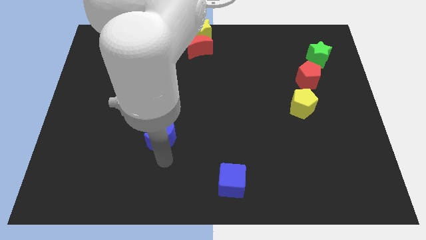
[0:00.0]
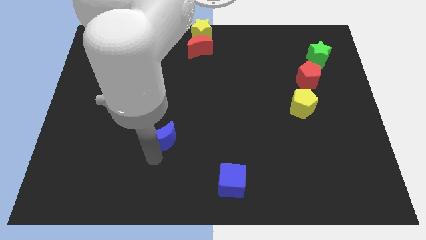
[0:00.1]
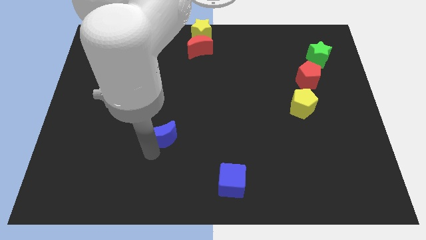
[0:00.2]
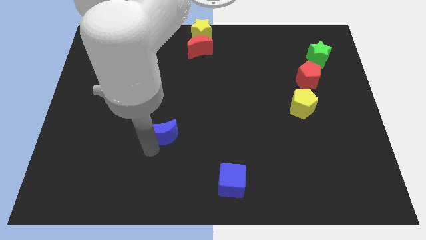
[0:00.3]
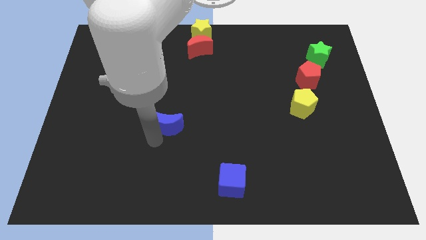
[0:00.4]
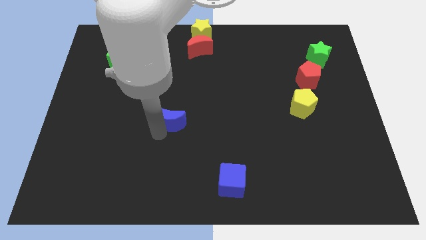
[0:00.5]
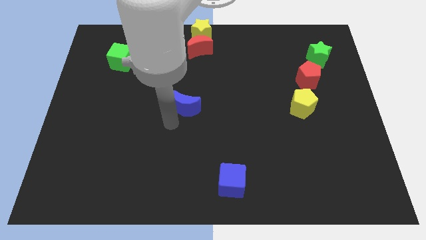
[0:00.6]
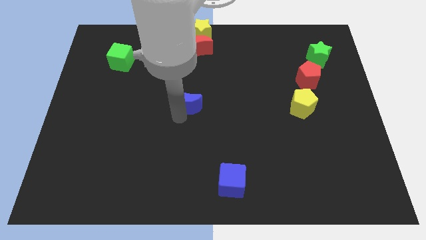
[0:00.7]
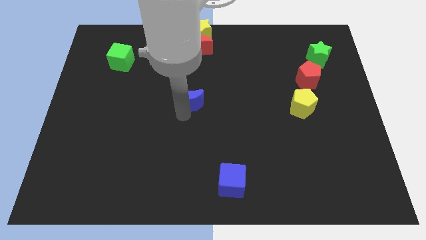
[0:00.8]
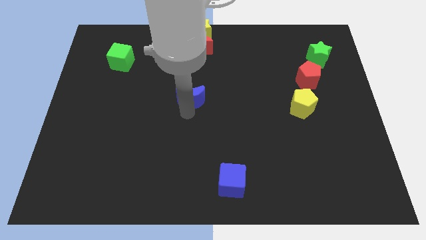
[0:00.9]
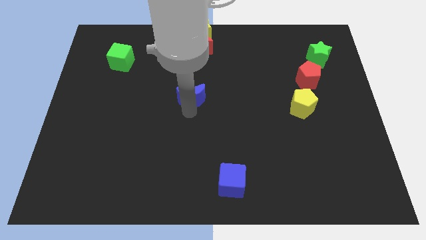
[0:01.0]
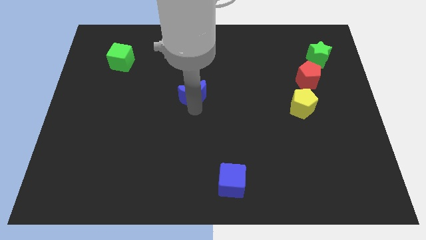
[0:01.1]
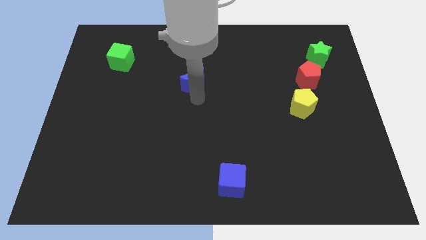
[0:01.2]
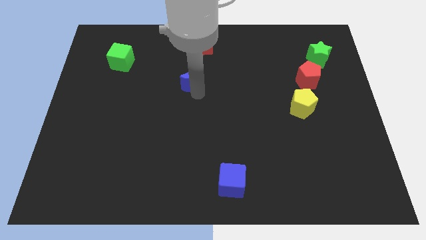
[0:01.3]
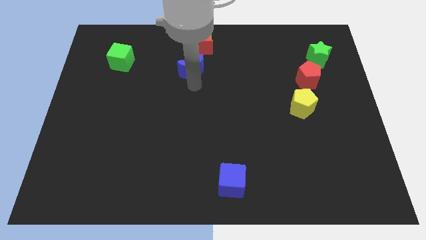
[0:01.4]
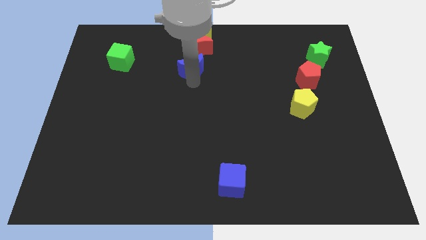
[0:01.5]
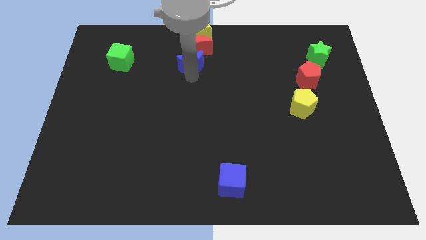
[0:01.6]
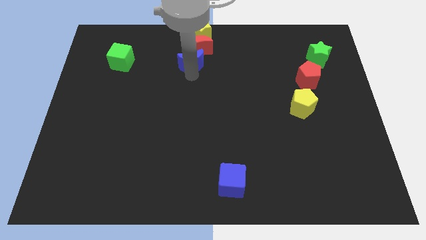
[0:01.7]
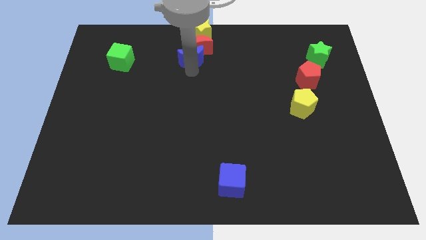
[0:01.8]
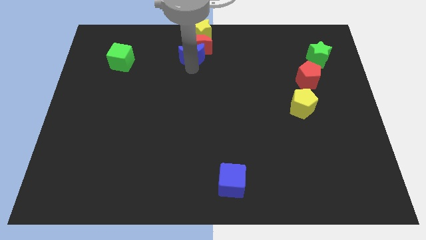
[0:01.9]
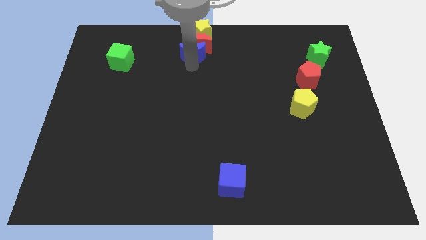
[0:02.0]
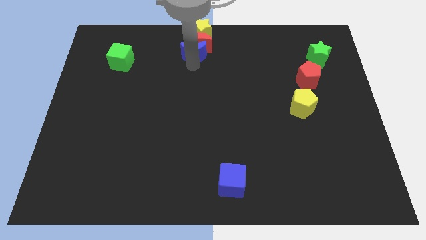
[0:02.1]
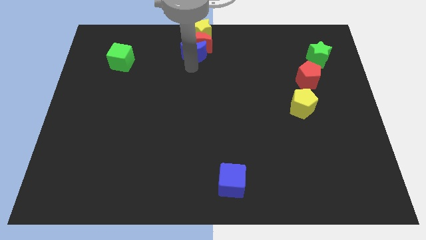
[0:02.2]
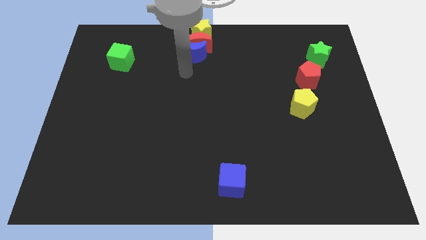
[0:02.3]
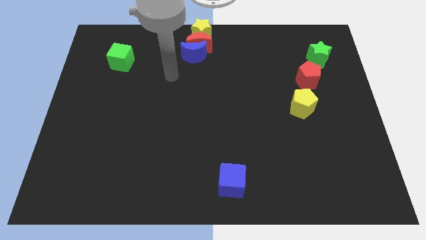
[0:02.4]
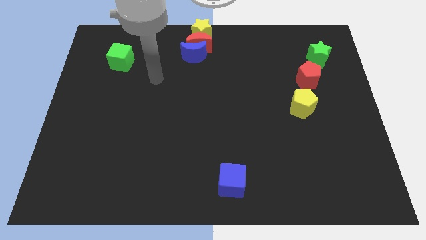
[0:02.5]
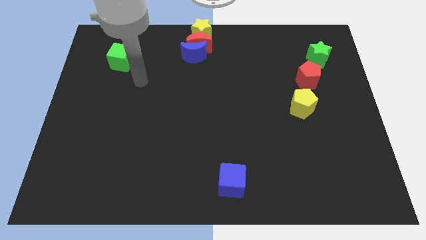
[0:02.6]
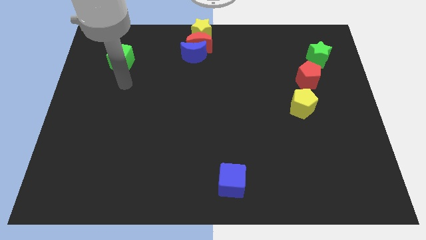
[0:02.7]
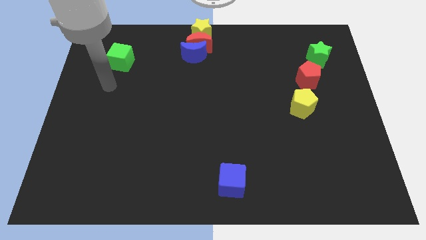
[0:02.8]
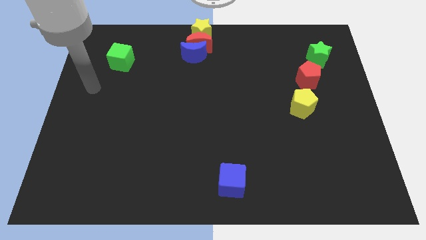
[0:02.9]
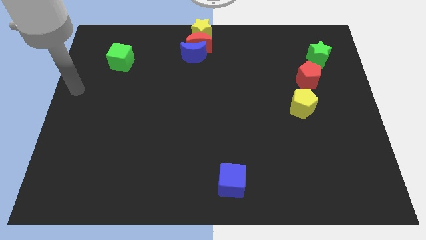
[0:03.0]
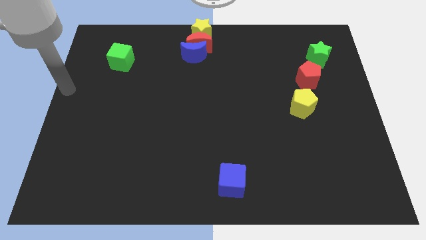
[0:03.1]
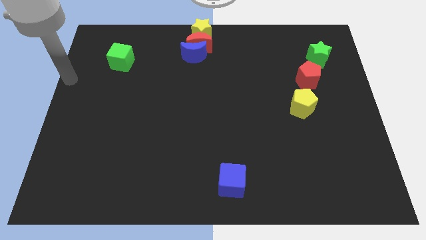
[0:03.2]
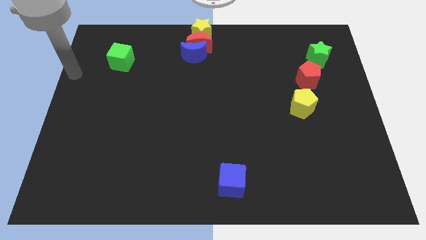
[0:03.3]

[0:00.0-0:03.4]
move the blue crescent into the red crescent

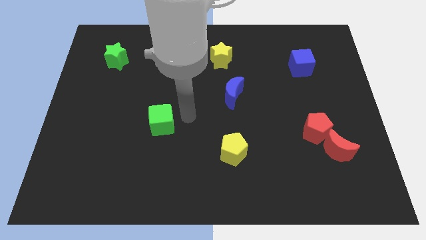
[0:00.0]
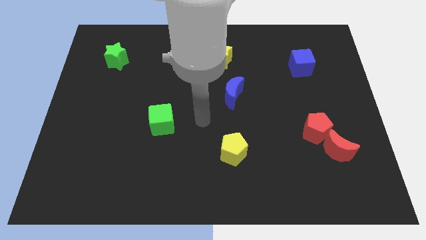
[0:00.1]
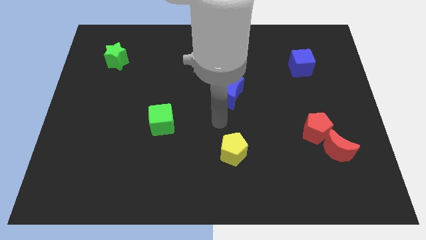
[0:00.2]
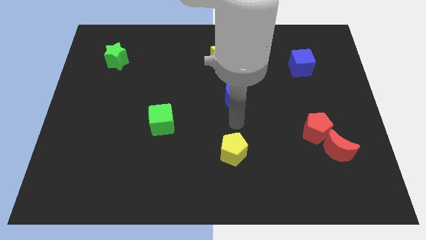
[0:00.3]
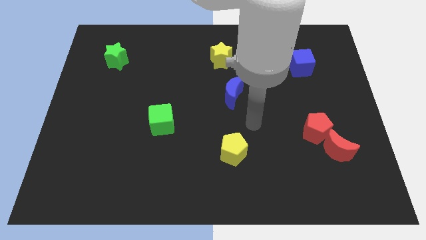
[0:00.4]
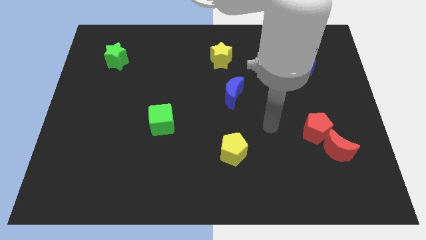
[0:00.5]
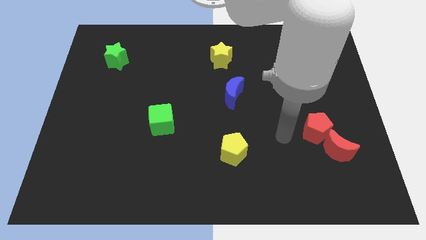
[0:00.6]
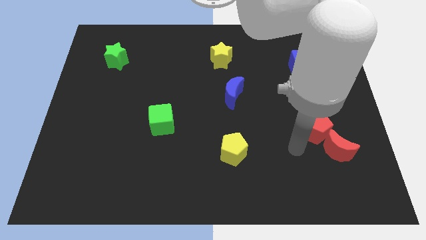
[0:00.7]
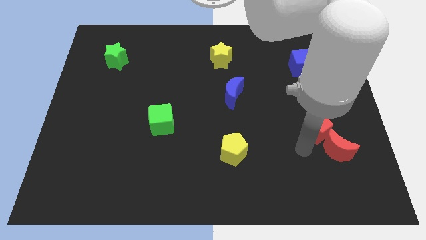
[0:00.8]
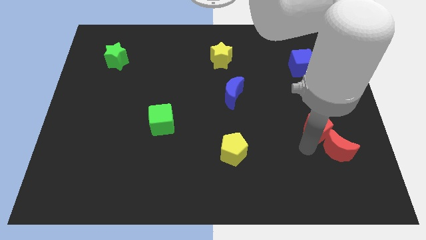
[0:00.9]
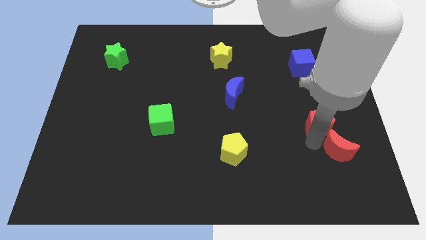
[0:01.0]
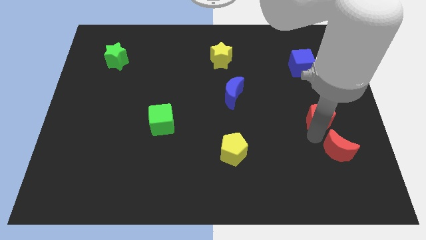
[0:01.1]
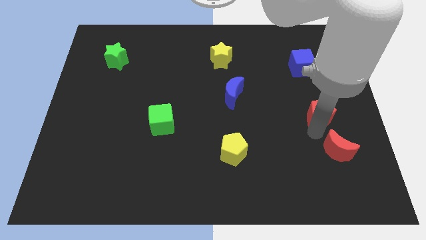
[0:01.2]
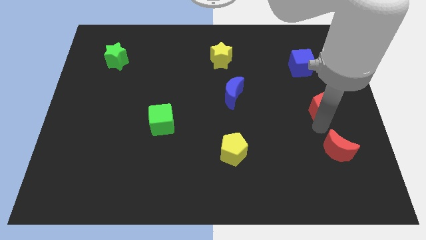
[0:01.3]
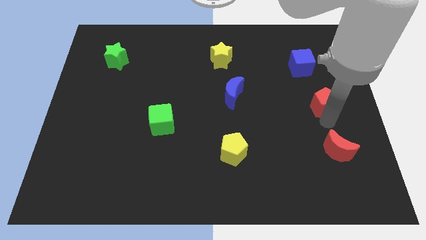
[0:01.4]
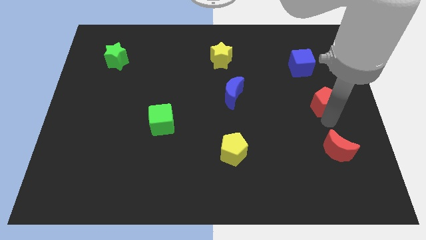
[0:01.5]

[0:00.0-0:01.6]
push the red pentagon to the top of the red crescent

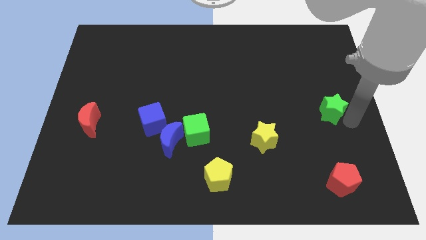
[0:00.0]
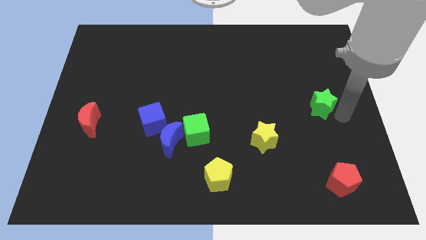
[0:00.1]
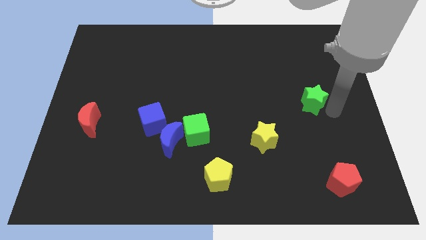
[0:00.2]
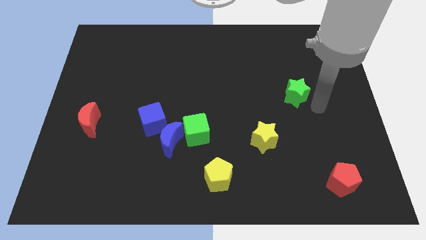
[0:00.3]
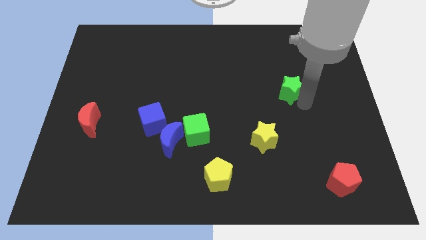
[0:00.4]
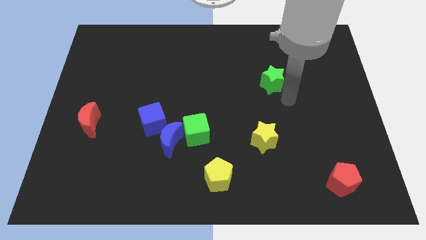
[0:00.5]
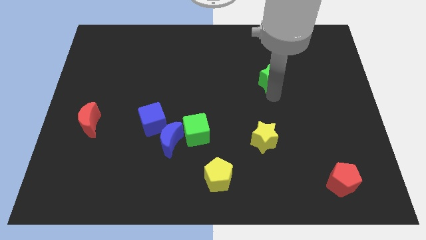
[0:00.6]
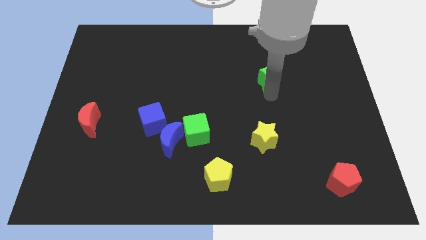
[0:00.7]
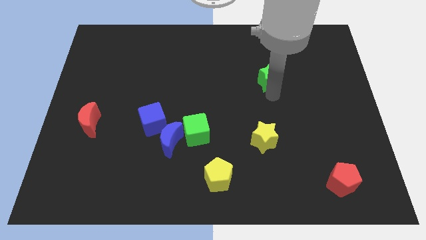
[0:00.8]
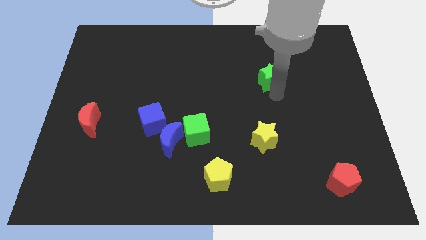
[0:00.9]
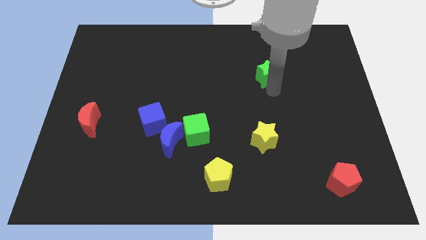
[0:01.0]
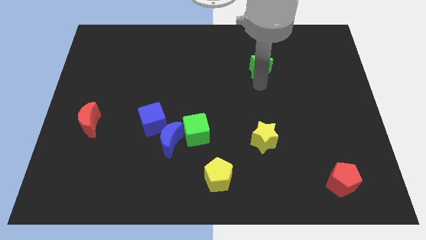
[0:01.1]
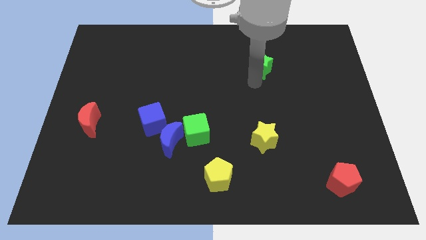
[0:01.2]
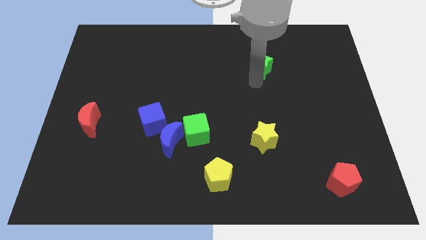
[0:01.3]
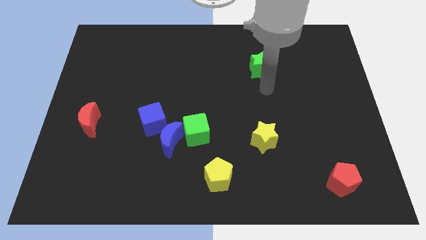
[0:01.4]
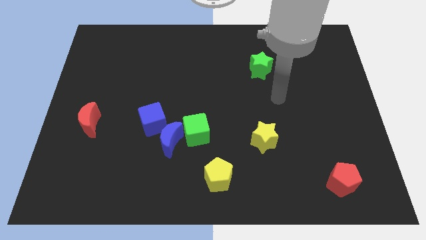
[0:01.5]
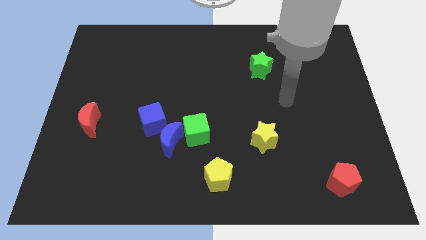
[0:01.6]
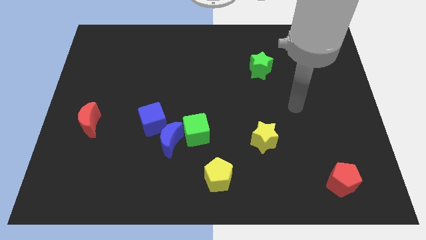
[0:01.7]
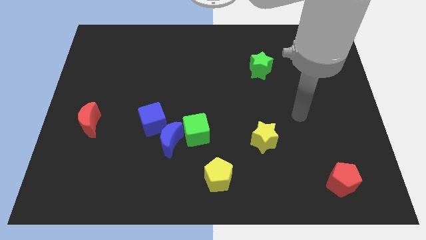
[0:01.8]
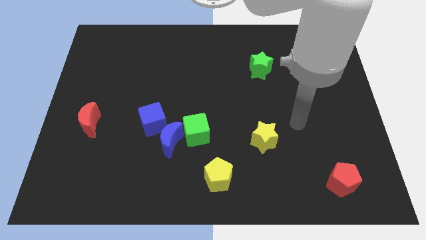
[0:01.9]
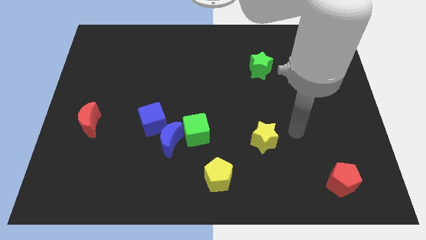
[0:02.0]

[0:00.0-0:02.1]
move the green star to the vertically on the top yellow star

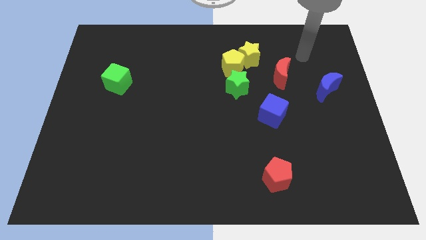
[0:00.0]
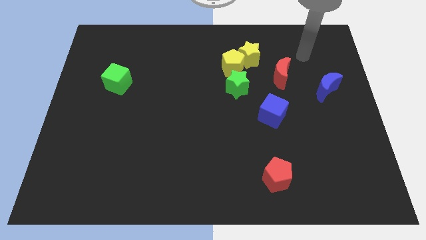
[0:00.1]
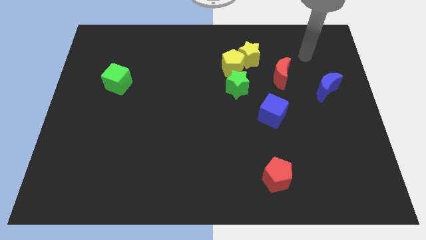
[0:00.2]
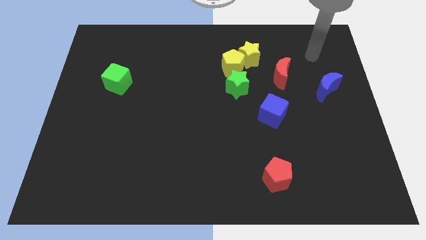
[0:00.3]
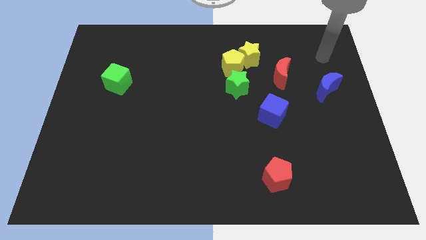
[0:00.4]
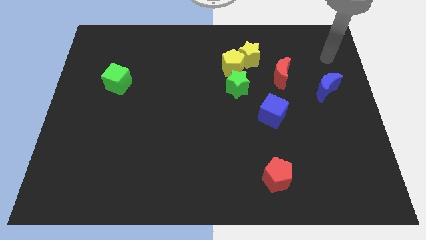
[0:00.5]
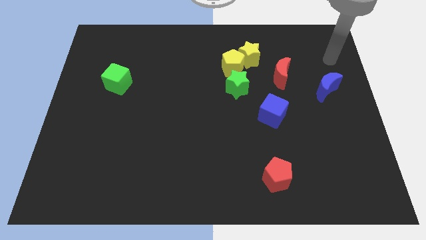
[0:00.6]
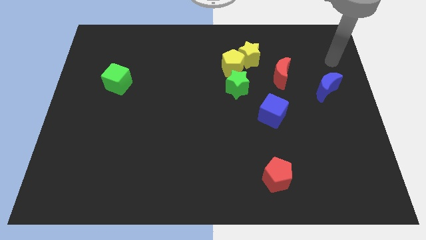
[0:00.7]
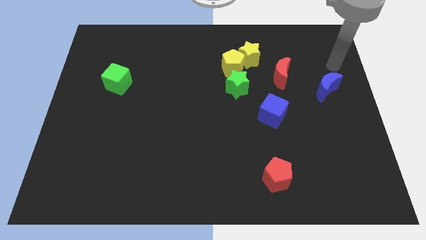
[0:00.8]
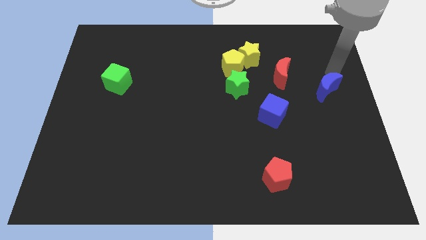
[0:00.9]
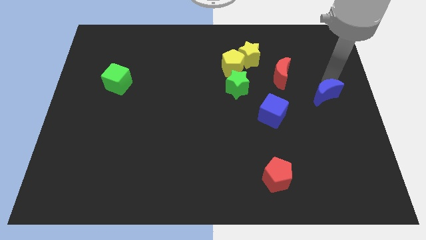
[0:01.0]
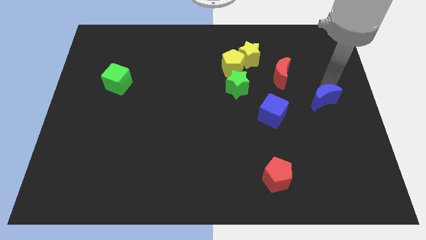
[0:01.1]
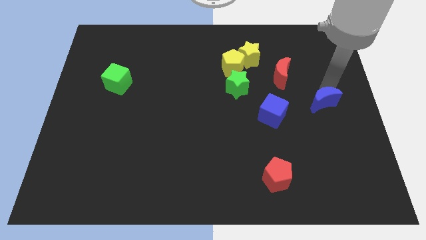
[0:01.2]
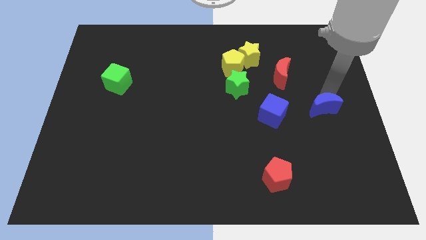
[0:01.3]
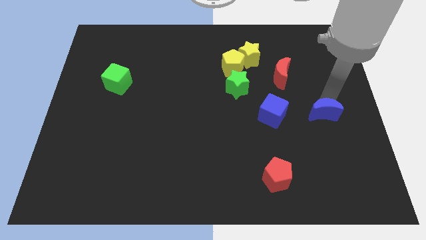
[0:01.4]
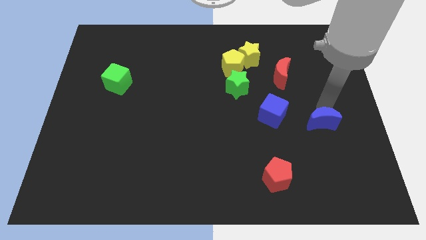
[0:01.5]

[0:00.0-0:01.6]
push the blue crescent down slightly

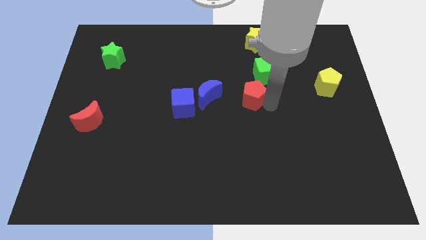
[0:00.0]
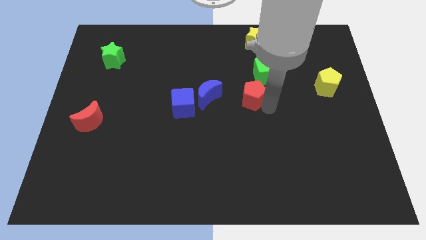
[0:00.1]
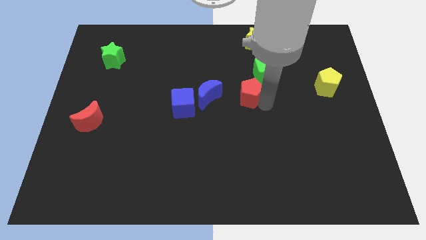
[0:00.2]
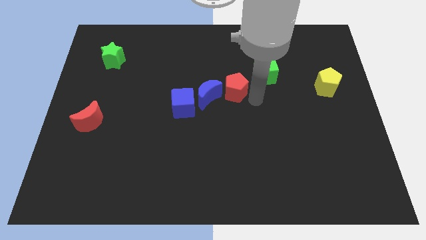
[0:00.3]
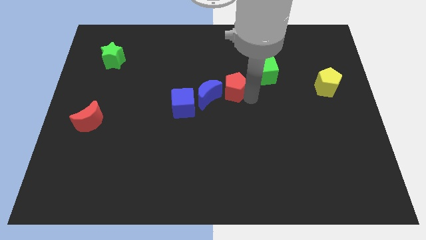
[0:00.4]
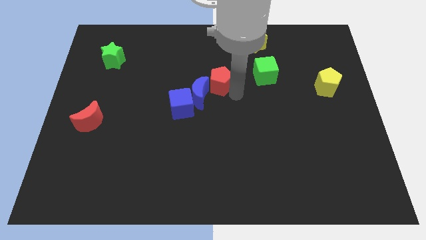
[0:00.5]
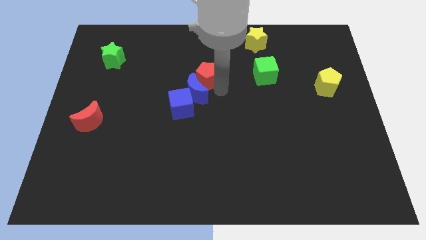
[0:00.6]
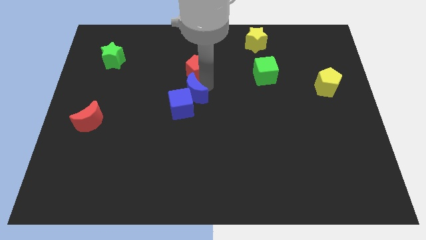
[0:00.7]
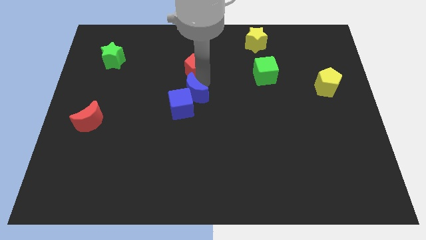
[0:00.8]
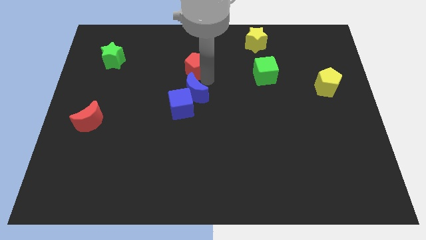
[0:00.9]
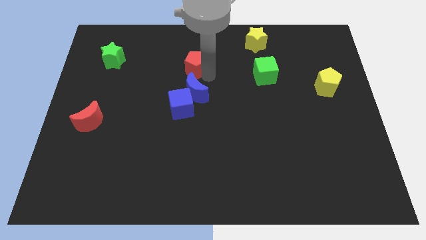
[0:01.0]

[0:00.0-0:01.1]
move red pentagon above blue moon
